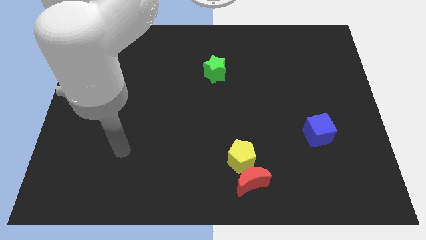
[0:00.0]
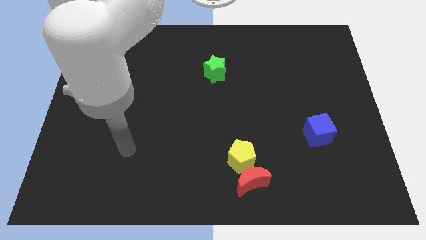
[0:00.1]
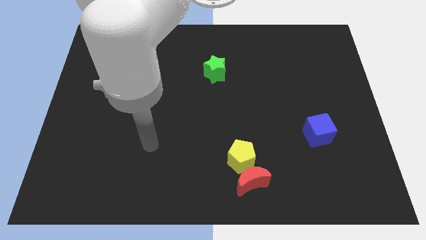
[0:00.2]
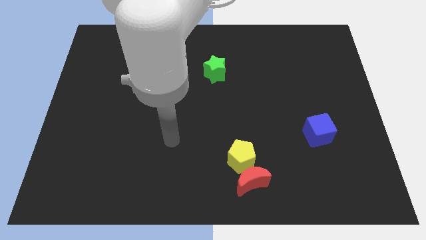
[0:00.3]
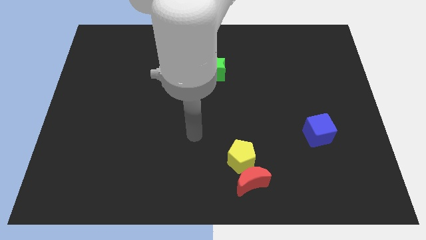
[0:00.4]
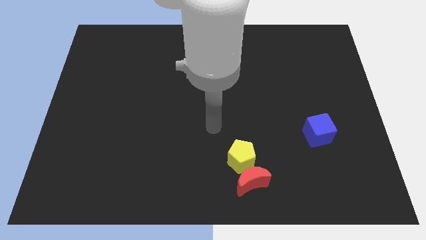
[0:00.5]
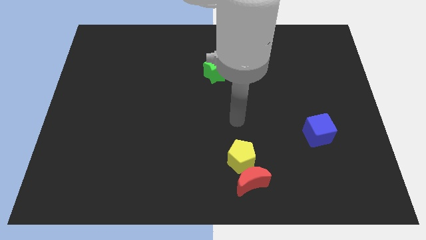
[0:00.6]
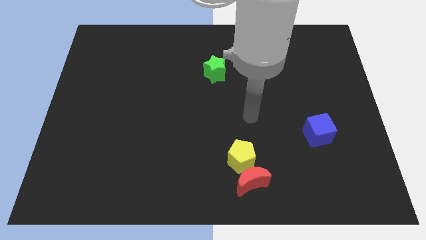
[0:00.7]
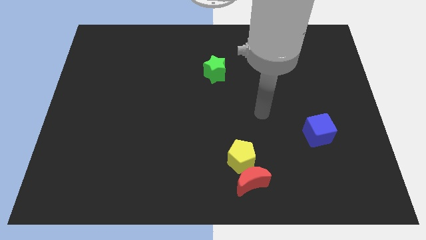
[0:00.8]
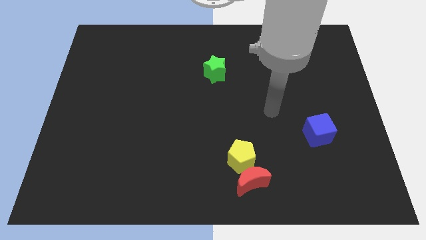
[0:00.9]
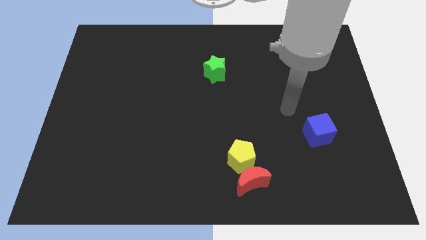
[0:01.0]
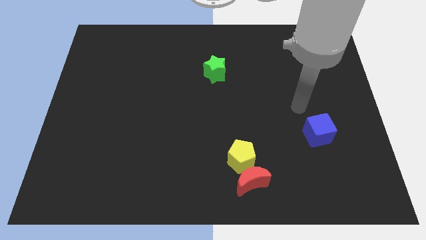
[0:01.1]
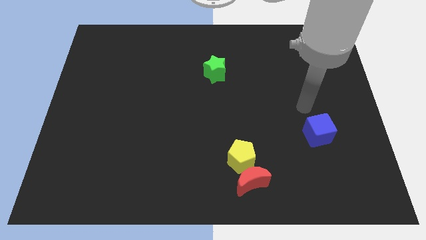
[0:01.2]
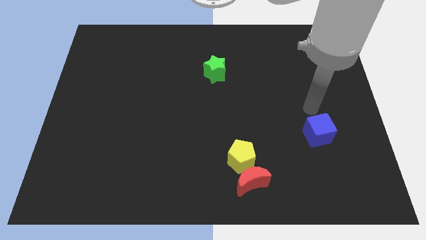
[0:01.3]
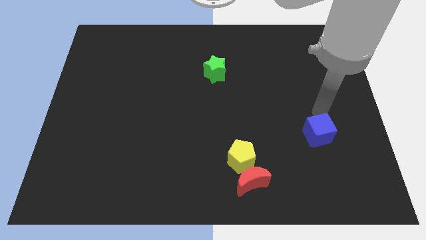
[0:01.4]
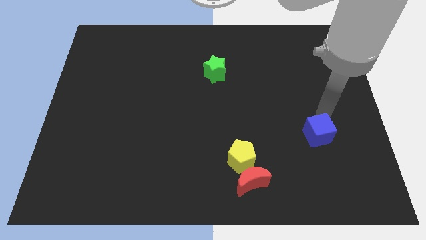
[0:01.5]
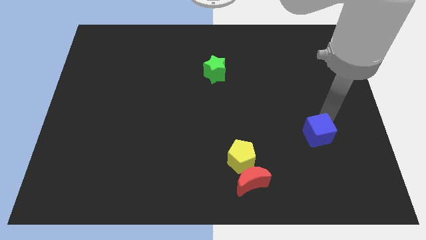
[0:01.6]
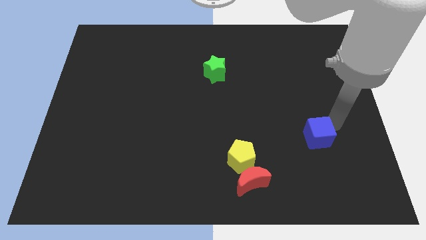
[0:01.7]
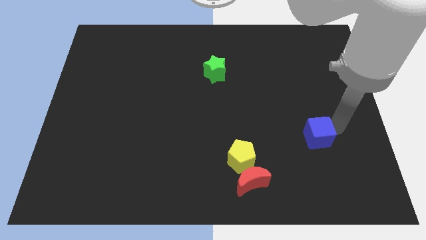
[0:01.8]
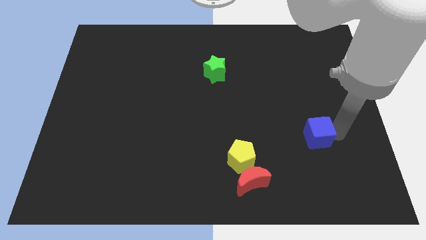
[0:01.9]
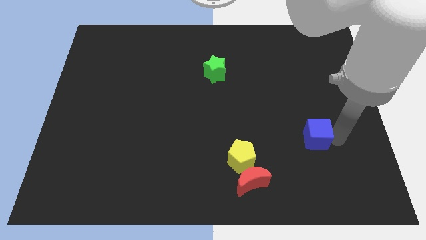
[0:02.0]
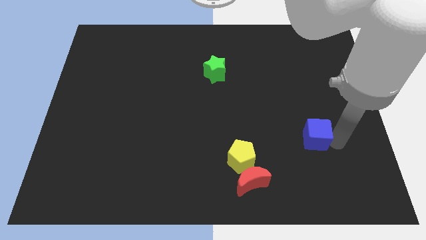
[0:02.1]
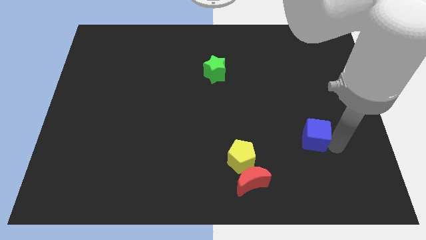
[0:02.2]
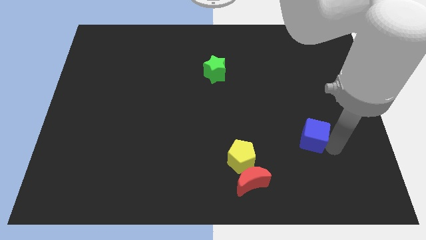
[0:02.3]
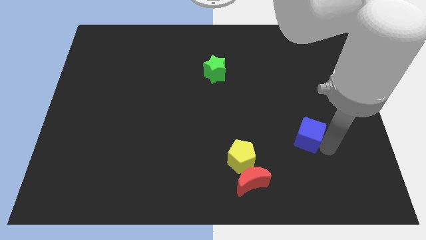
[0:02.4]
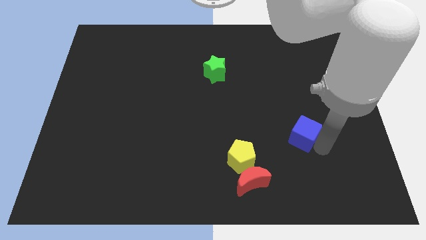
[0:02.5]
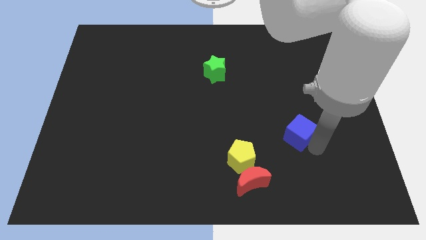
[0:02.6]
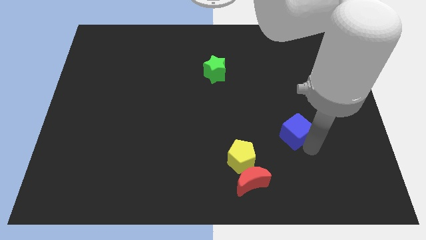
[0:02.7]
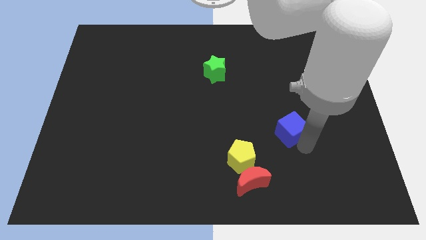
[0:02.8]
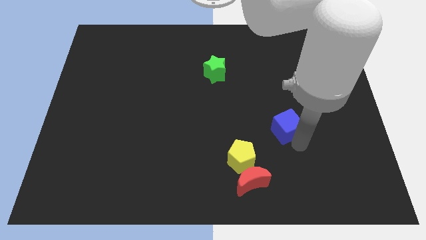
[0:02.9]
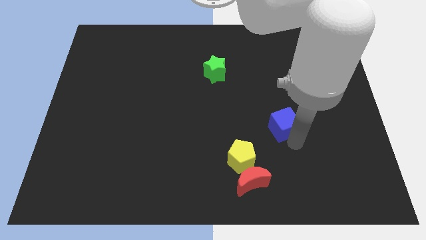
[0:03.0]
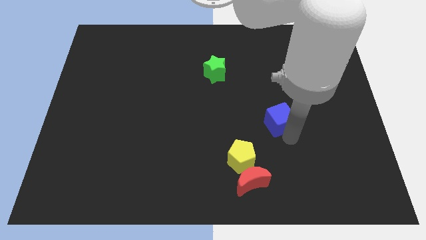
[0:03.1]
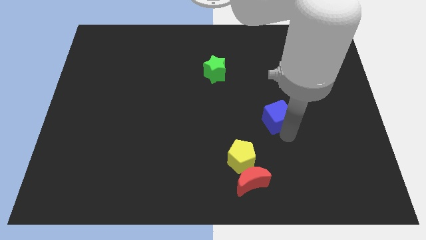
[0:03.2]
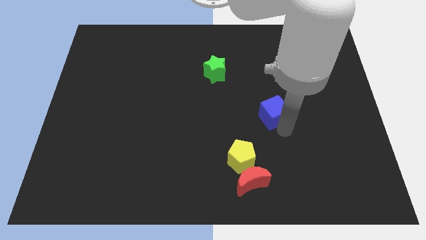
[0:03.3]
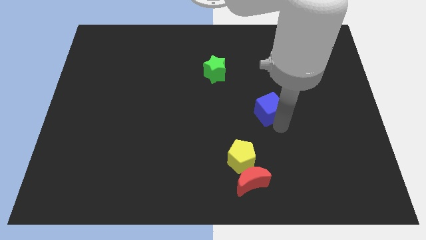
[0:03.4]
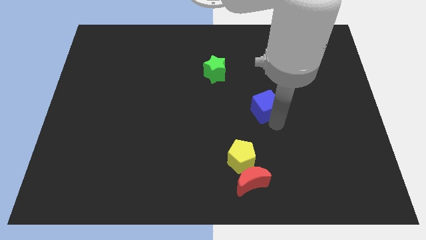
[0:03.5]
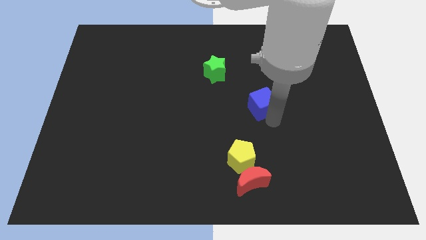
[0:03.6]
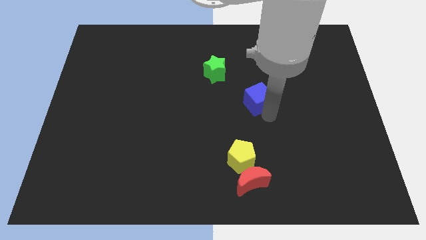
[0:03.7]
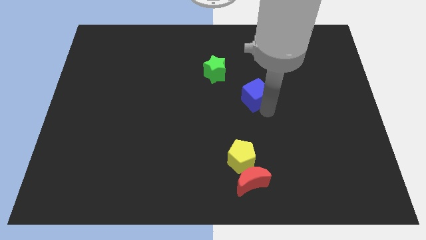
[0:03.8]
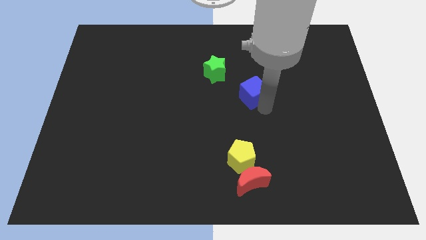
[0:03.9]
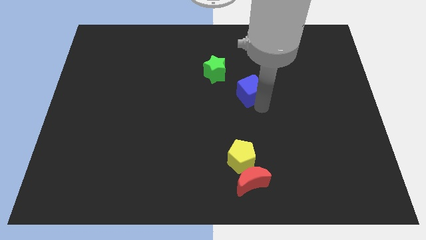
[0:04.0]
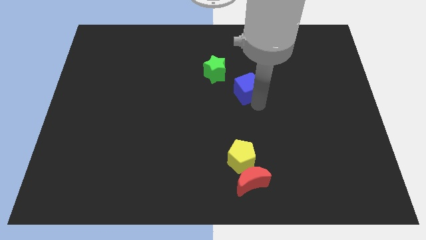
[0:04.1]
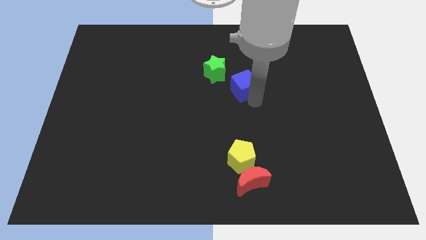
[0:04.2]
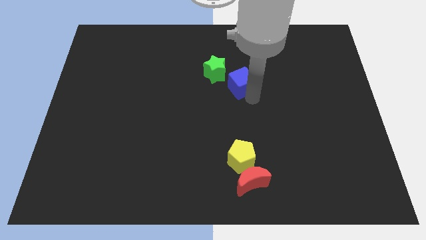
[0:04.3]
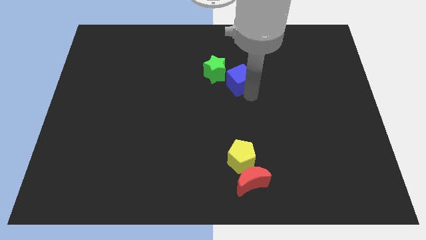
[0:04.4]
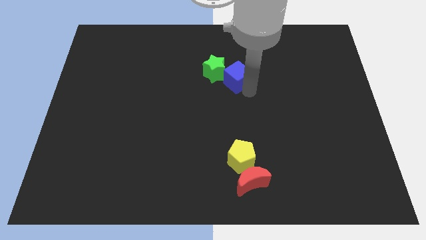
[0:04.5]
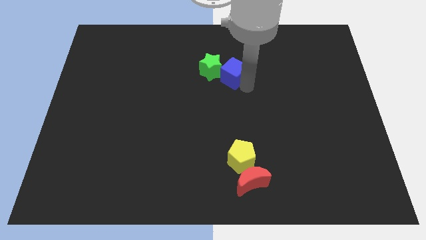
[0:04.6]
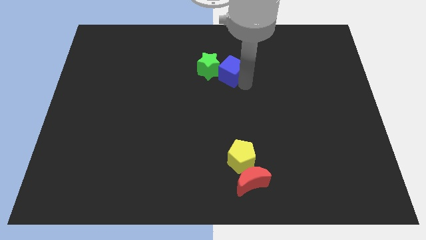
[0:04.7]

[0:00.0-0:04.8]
push the blue cube next to the green block

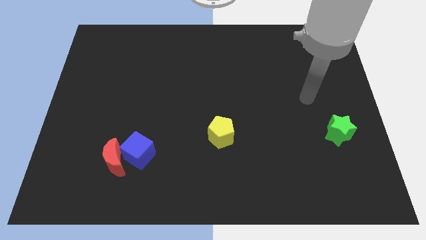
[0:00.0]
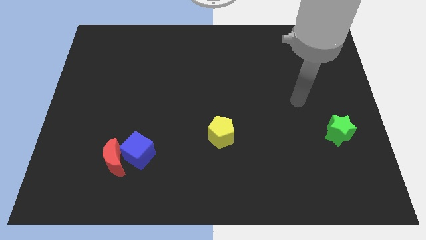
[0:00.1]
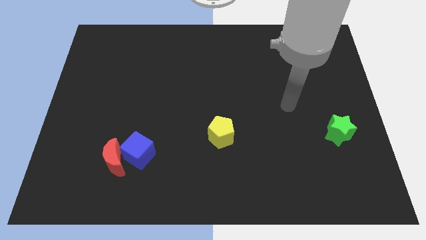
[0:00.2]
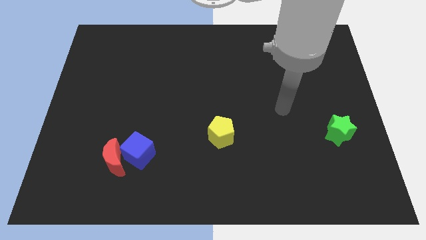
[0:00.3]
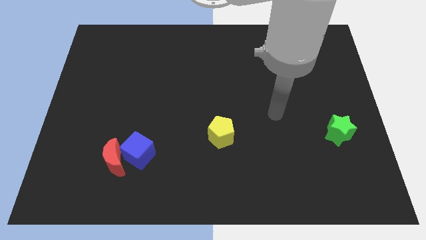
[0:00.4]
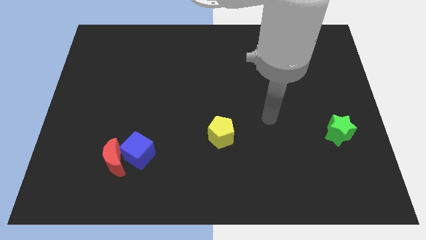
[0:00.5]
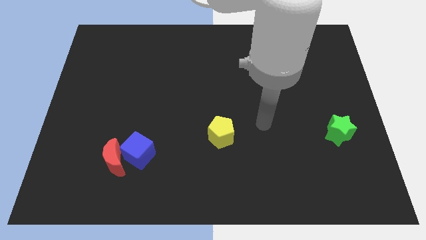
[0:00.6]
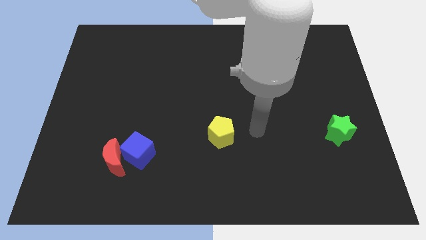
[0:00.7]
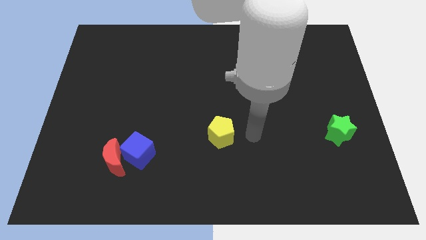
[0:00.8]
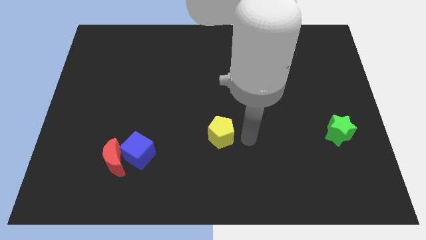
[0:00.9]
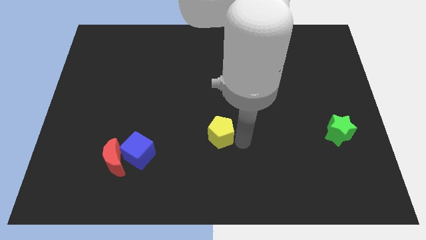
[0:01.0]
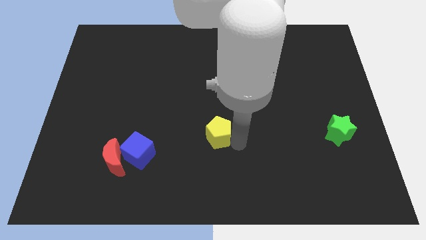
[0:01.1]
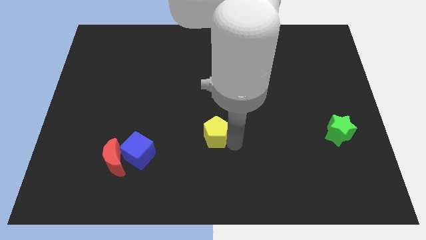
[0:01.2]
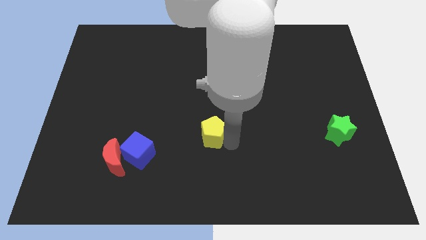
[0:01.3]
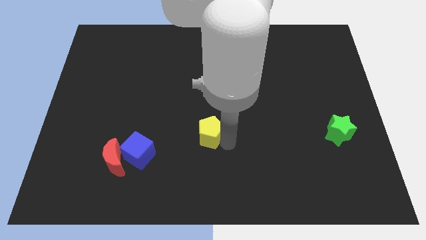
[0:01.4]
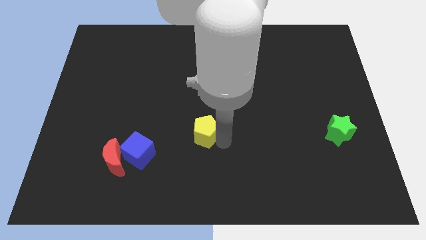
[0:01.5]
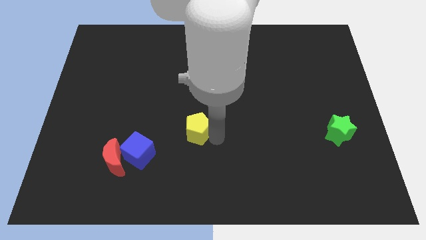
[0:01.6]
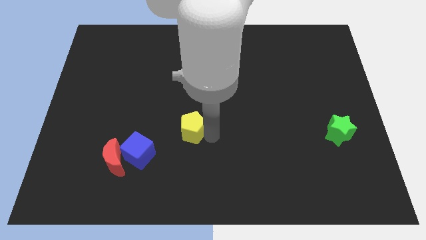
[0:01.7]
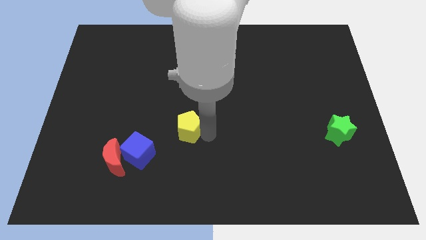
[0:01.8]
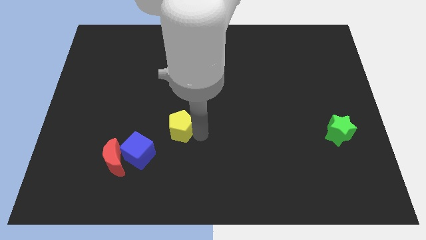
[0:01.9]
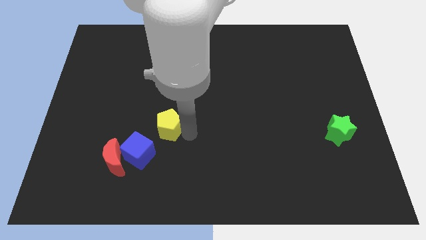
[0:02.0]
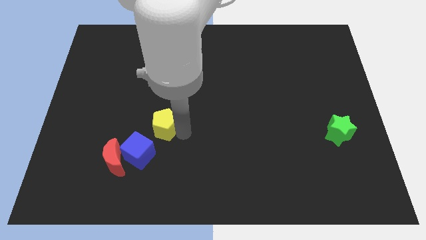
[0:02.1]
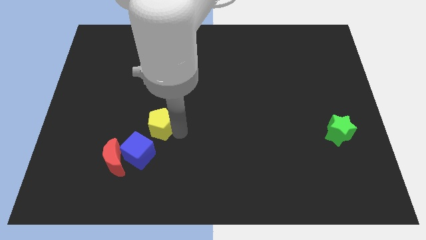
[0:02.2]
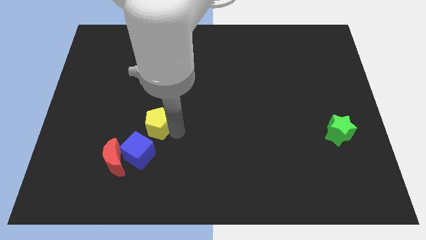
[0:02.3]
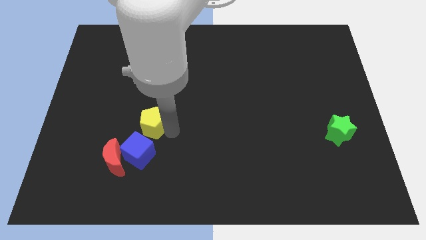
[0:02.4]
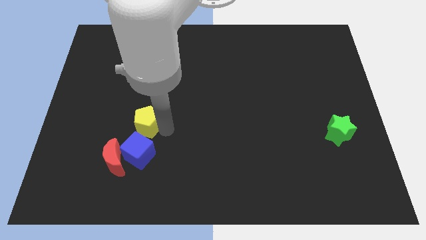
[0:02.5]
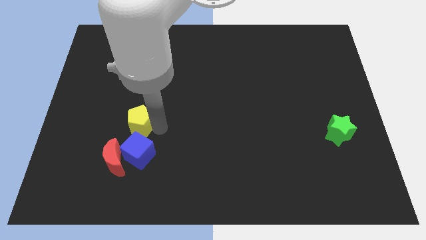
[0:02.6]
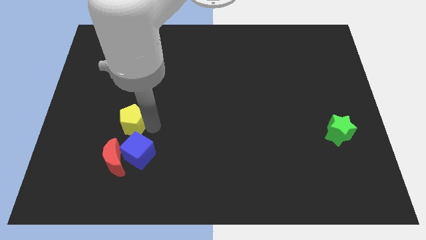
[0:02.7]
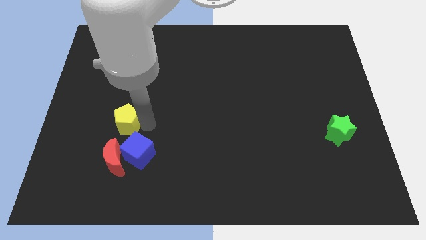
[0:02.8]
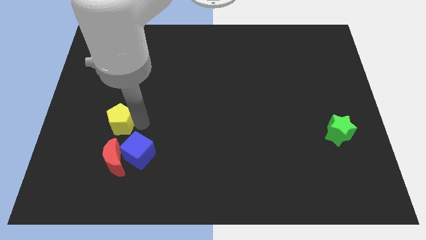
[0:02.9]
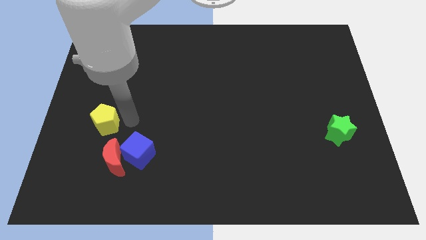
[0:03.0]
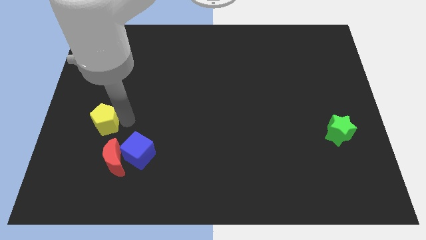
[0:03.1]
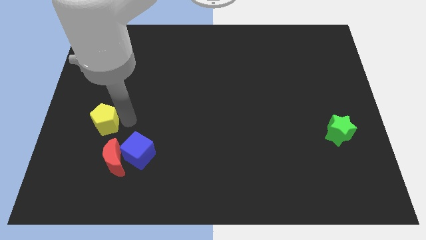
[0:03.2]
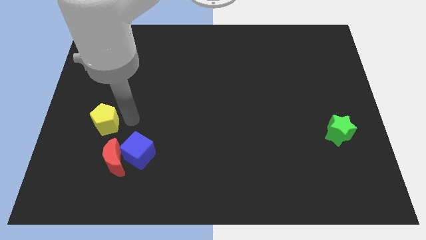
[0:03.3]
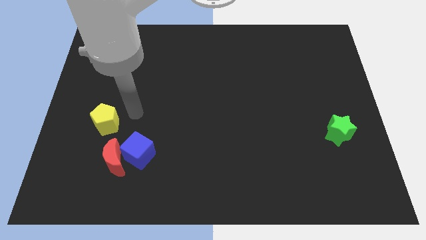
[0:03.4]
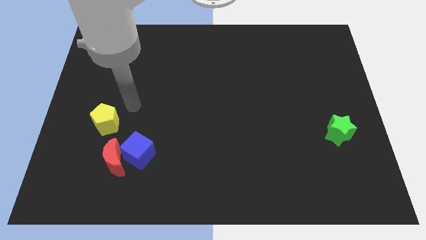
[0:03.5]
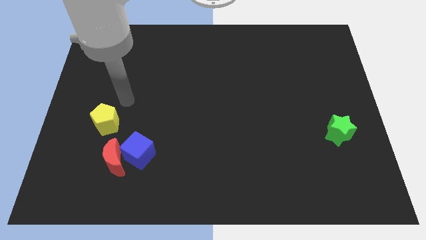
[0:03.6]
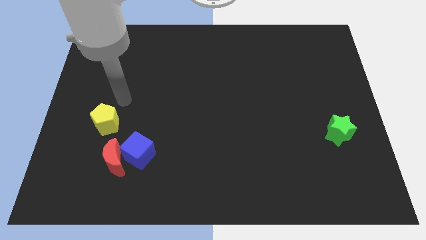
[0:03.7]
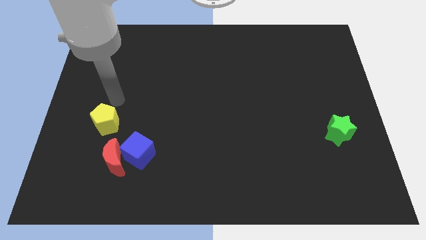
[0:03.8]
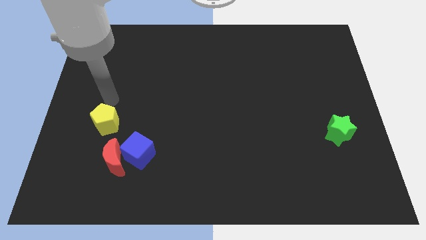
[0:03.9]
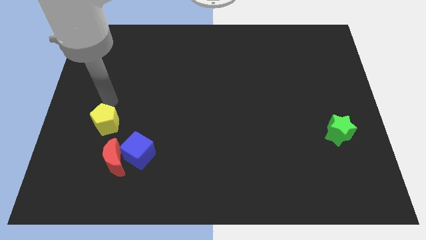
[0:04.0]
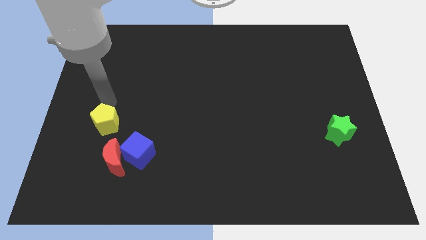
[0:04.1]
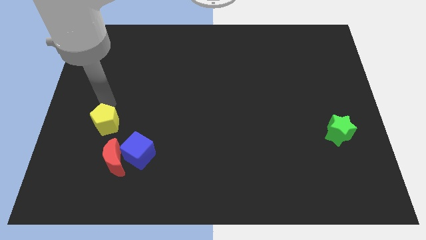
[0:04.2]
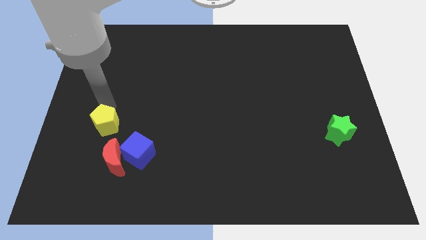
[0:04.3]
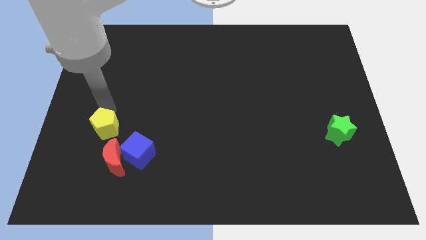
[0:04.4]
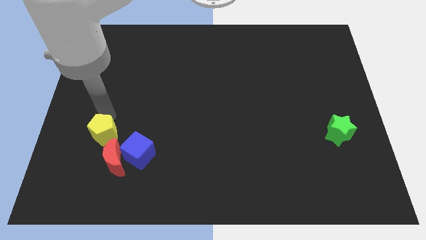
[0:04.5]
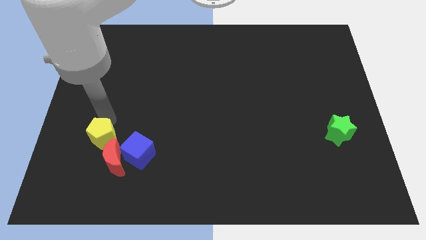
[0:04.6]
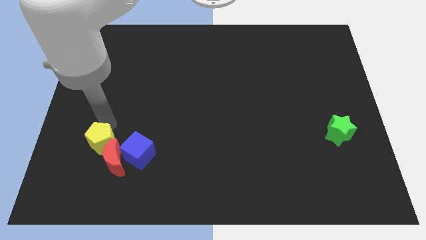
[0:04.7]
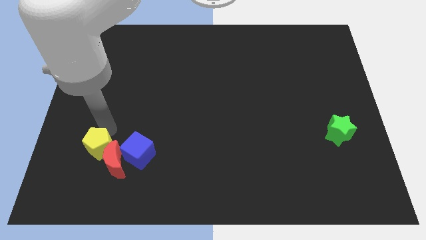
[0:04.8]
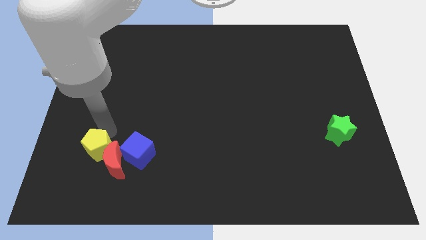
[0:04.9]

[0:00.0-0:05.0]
push the yellow pentagon next to the red block
